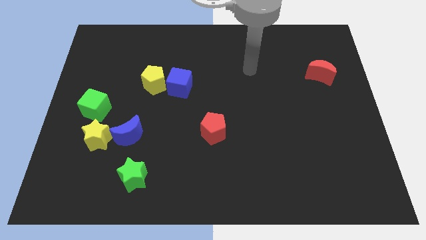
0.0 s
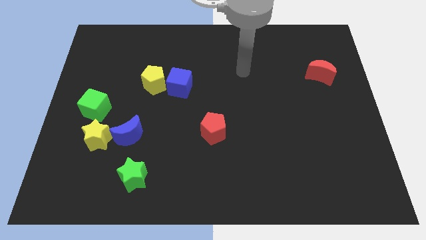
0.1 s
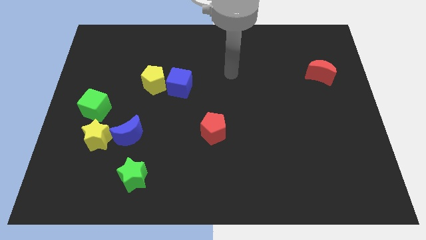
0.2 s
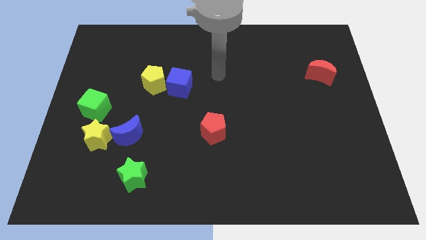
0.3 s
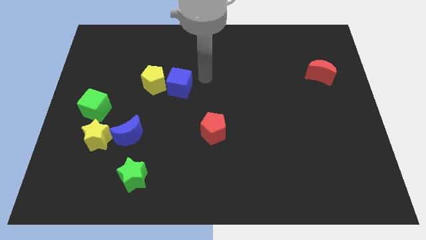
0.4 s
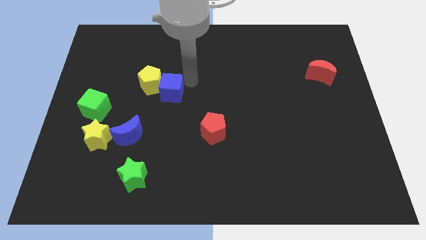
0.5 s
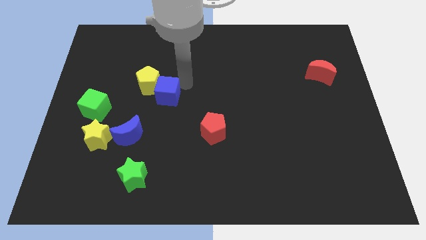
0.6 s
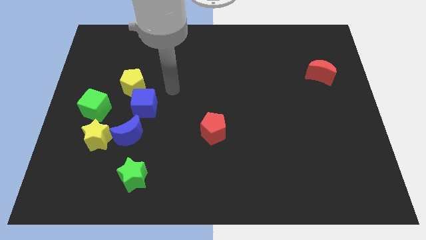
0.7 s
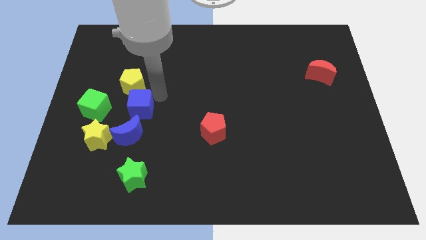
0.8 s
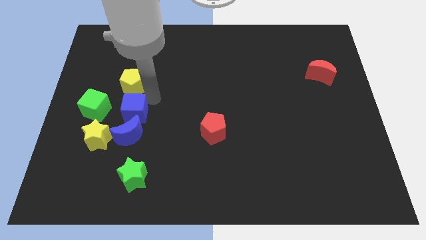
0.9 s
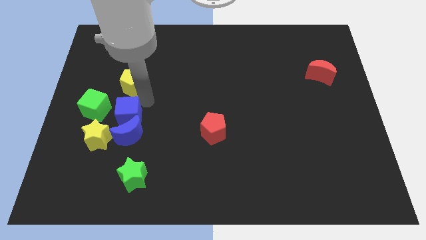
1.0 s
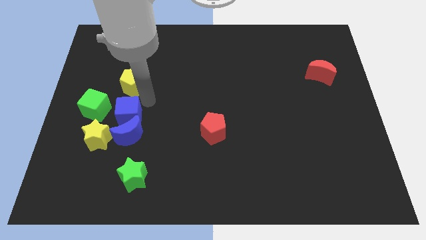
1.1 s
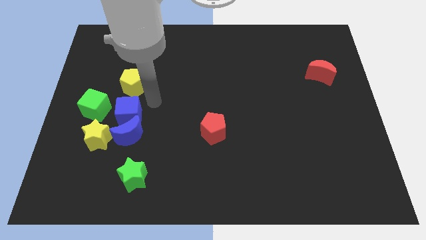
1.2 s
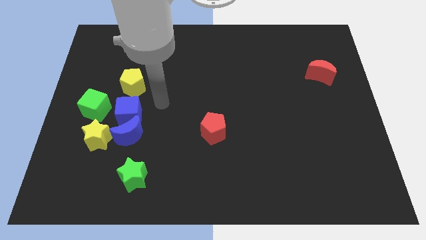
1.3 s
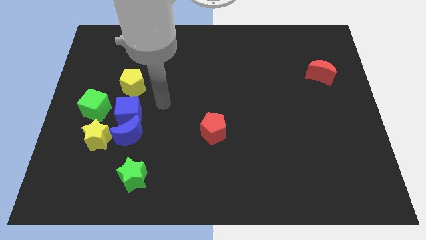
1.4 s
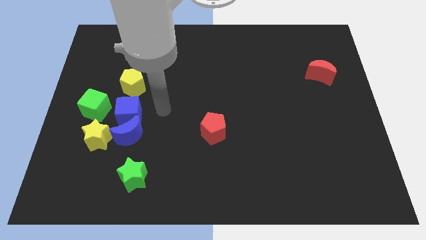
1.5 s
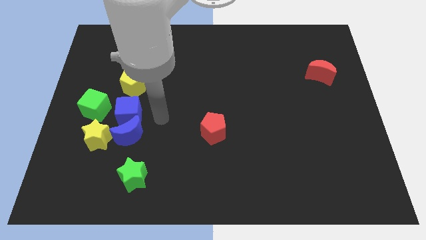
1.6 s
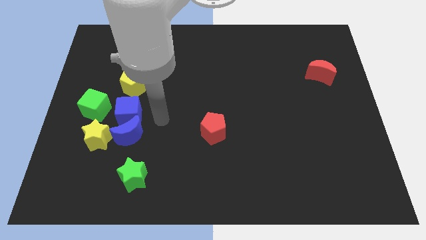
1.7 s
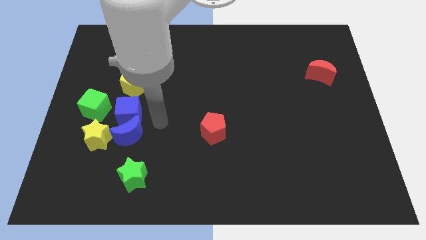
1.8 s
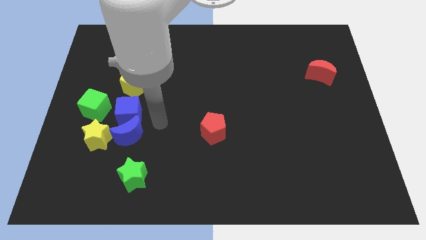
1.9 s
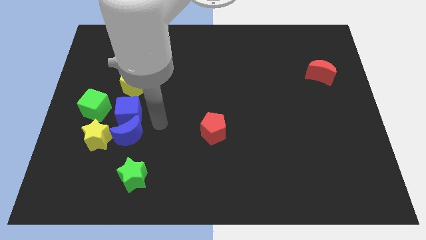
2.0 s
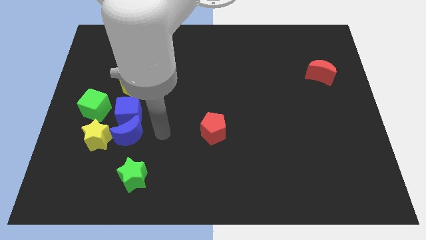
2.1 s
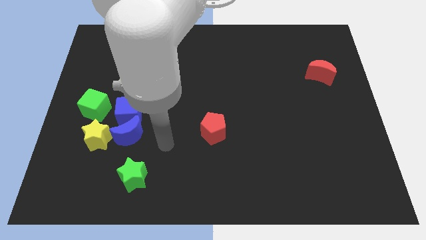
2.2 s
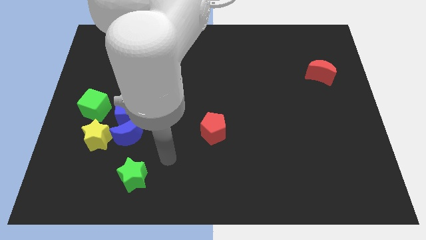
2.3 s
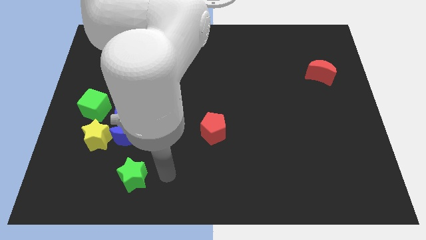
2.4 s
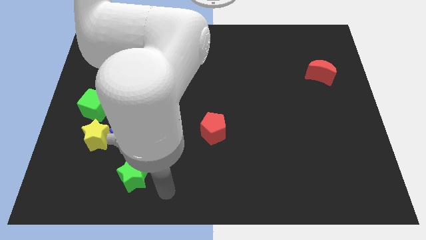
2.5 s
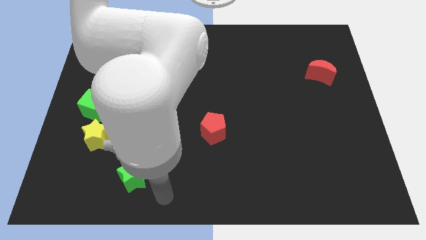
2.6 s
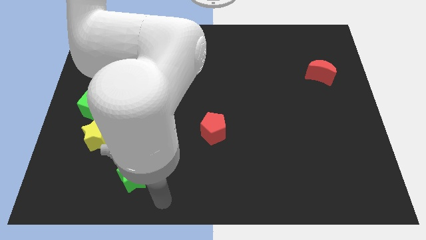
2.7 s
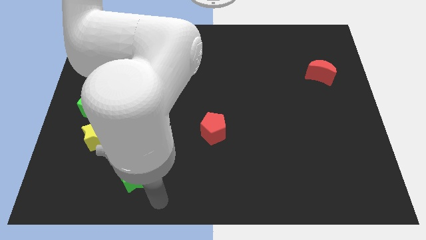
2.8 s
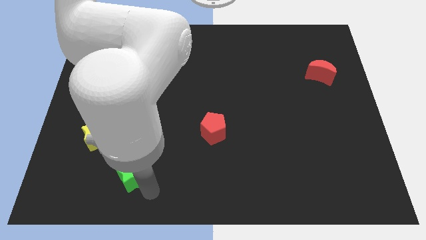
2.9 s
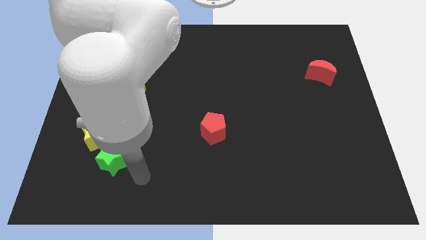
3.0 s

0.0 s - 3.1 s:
move the blue cube and the green star slightly to the left side

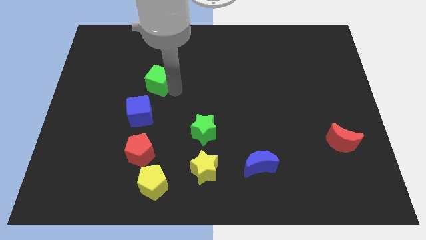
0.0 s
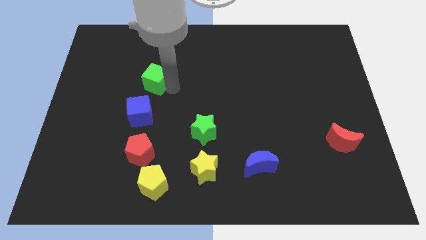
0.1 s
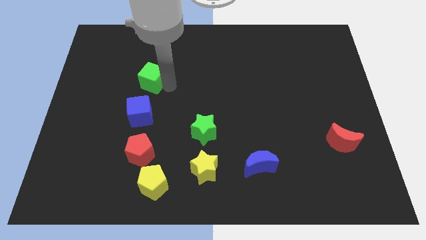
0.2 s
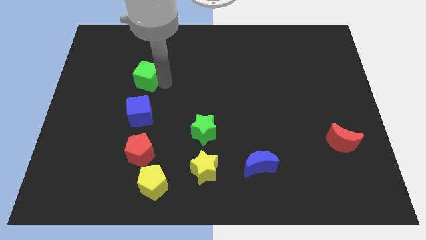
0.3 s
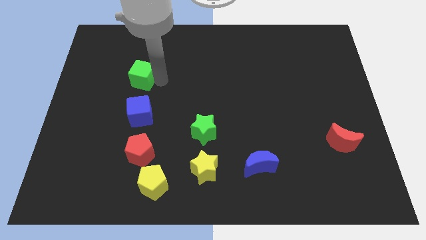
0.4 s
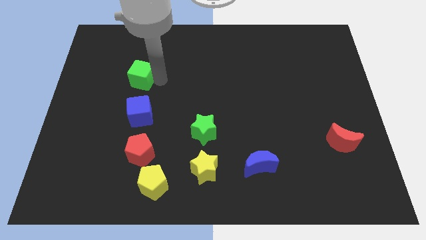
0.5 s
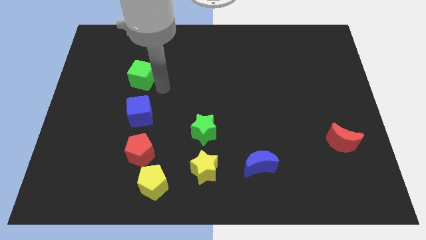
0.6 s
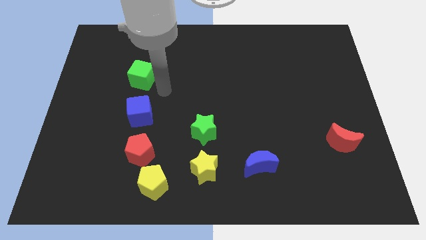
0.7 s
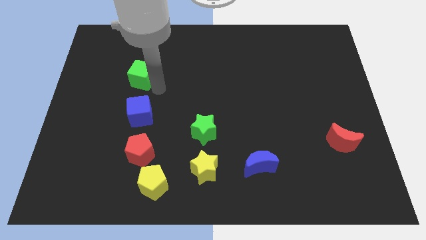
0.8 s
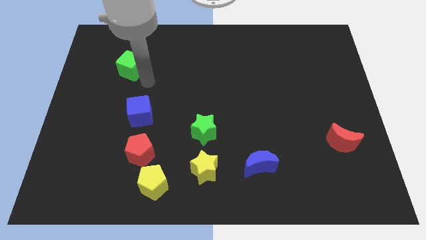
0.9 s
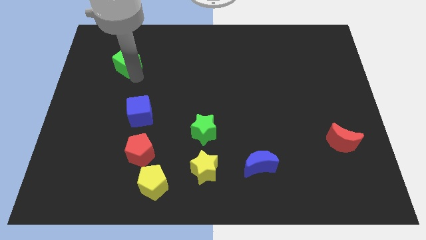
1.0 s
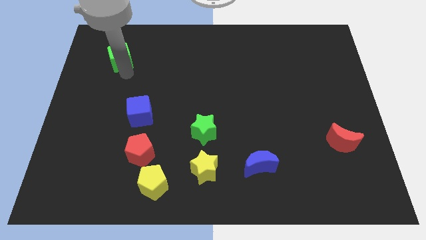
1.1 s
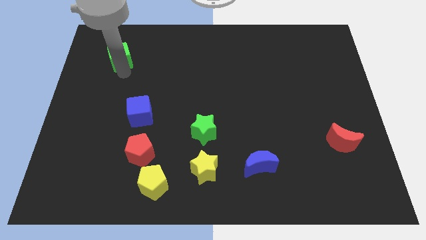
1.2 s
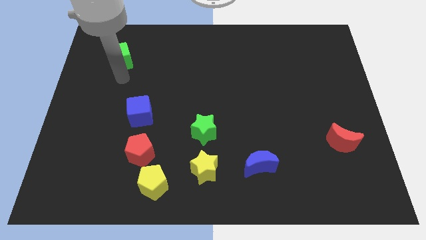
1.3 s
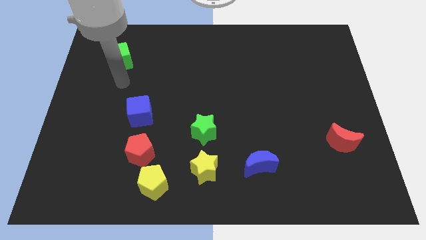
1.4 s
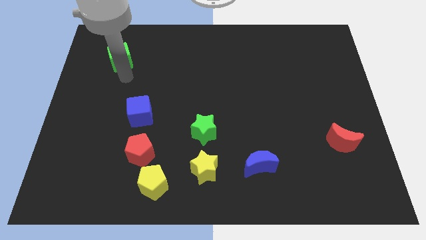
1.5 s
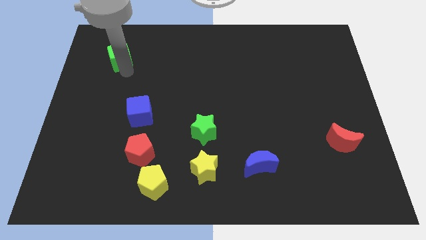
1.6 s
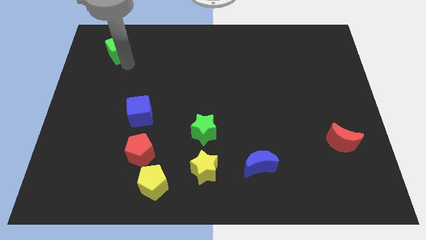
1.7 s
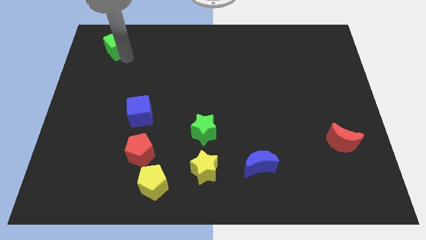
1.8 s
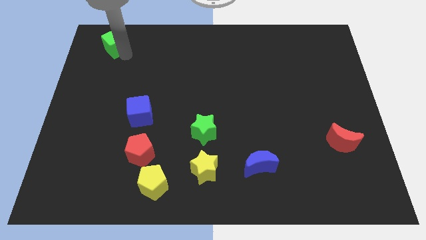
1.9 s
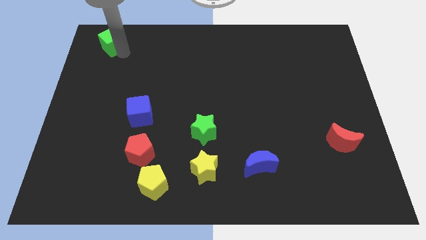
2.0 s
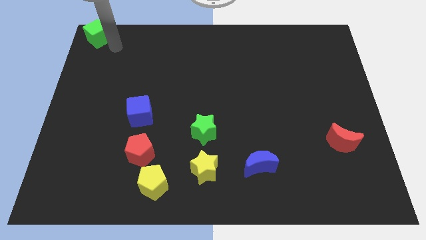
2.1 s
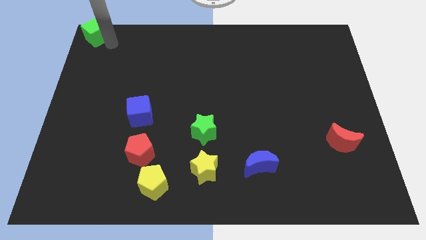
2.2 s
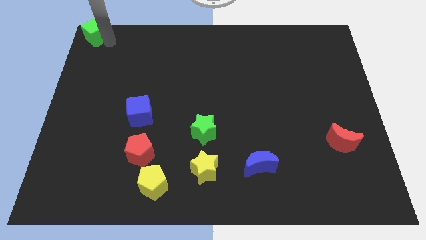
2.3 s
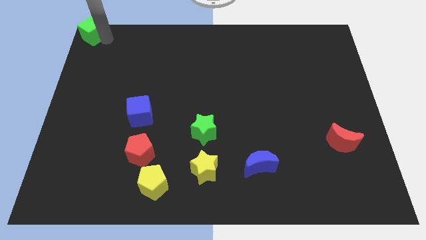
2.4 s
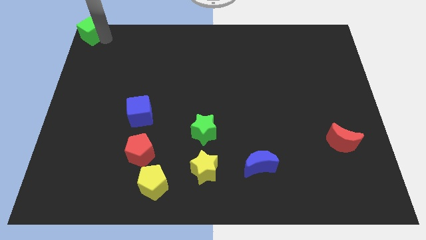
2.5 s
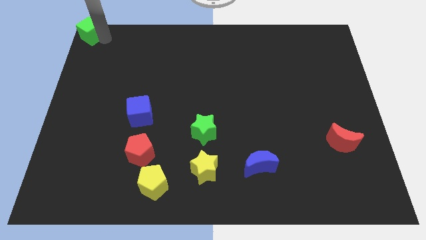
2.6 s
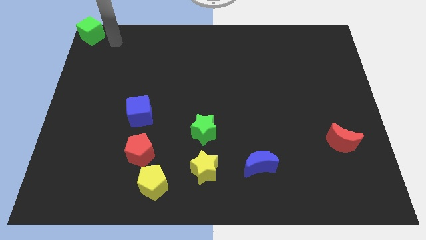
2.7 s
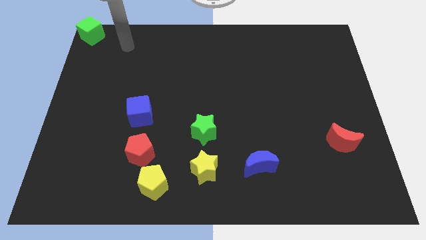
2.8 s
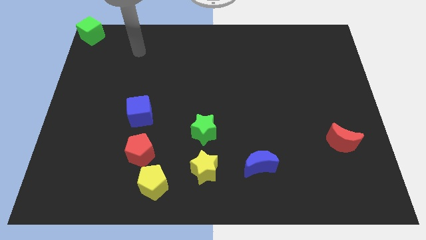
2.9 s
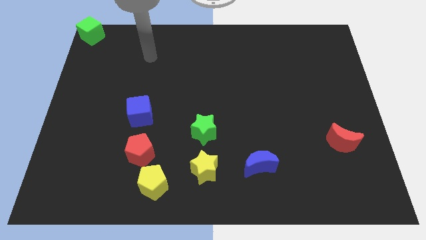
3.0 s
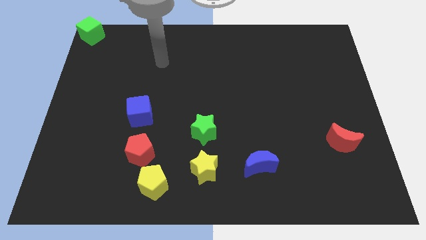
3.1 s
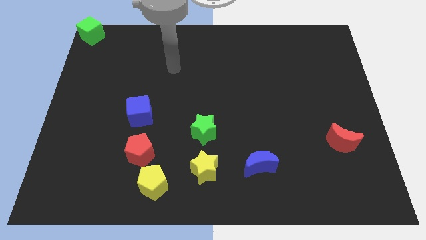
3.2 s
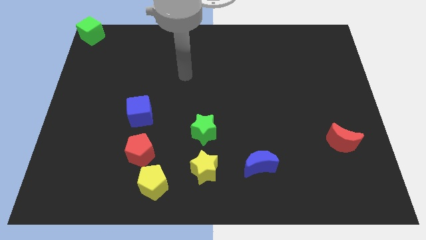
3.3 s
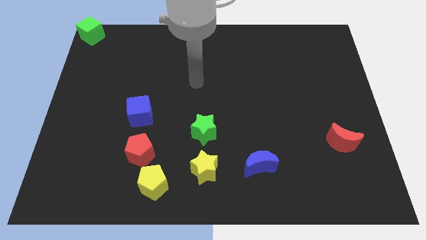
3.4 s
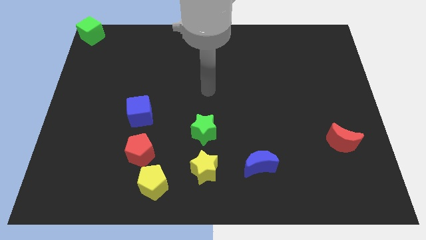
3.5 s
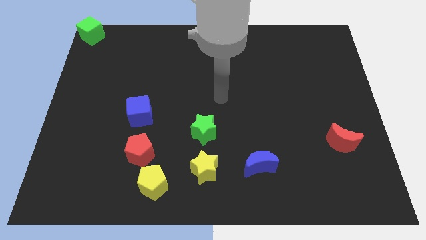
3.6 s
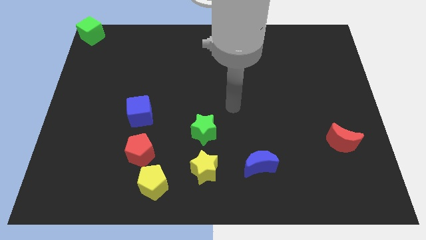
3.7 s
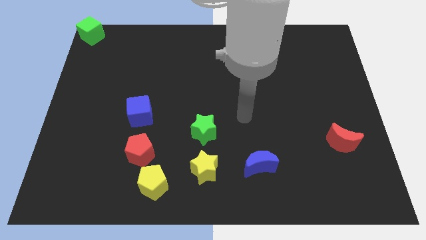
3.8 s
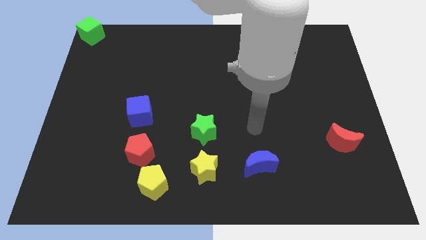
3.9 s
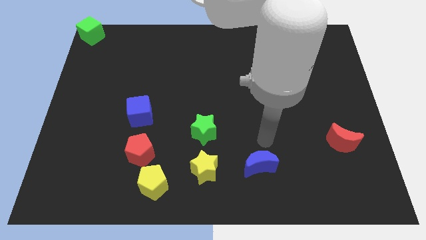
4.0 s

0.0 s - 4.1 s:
put the green cube at the top left corner

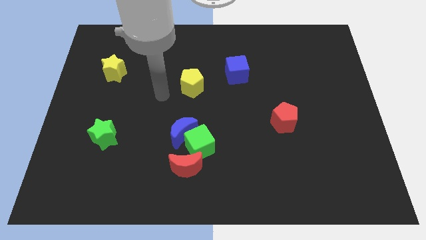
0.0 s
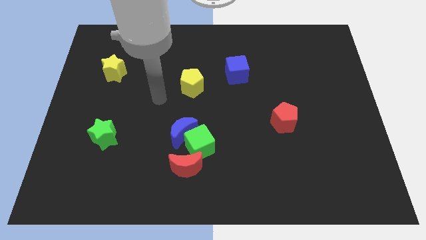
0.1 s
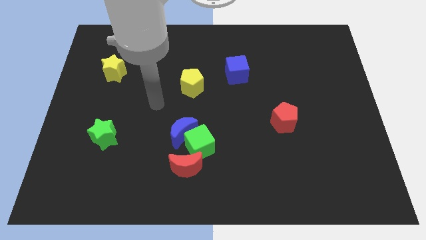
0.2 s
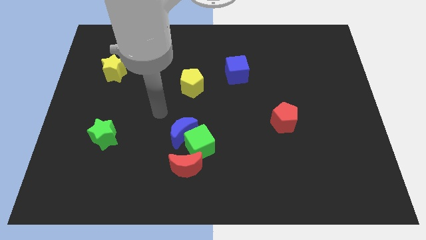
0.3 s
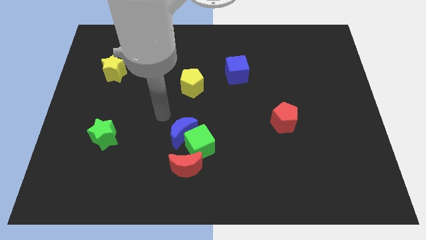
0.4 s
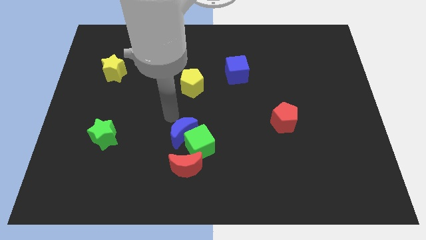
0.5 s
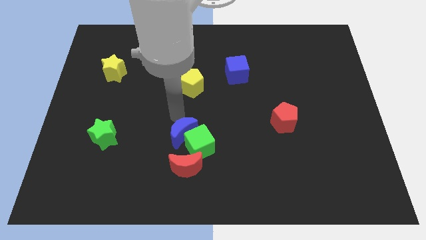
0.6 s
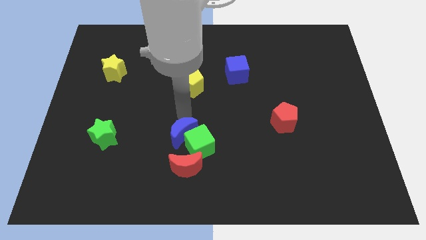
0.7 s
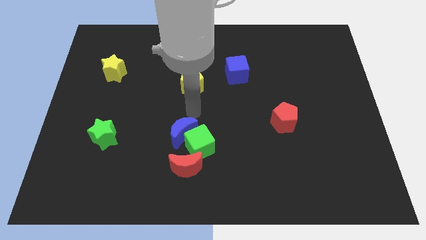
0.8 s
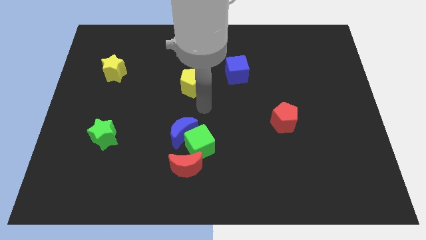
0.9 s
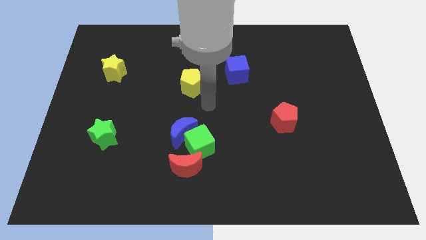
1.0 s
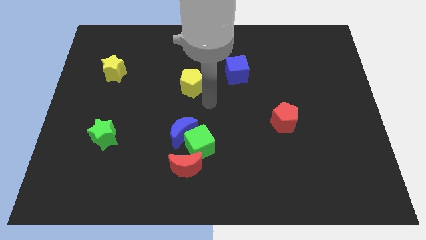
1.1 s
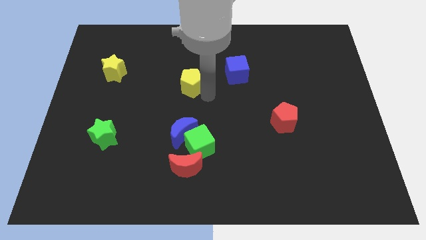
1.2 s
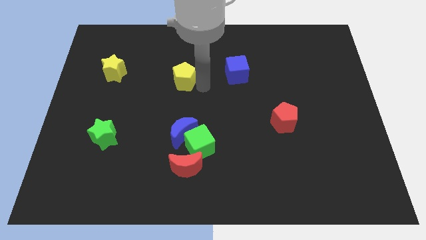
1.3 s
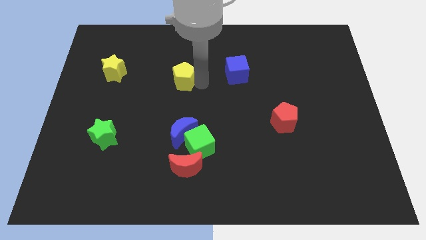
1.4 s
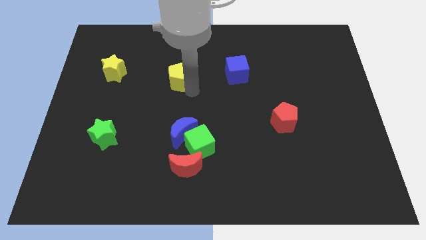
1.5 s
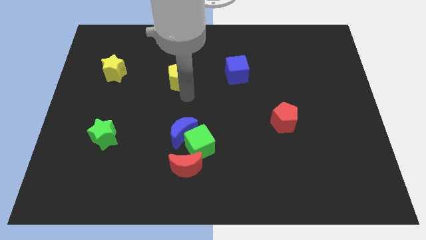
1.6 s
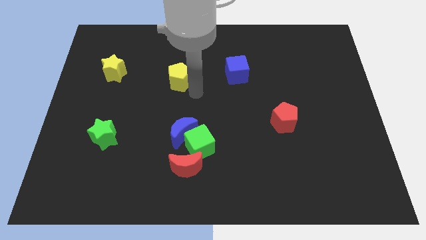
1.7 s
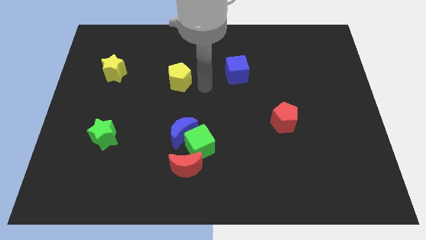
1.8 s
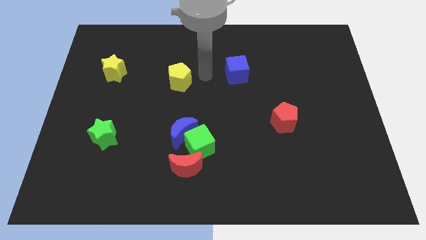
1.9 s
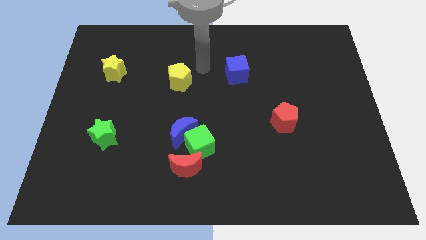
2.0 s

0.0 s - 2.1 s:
slightly move the yellow pentagon to top left
